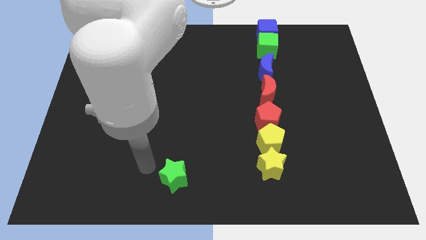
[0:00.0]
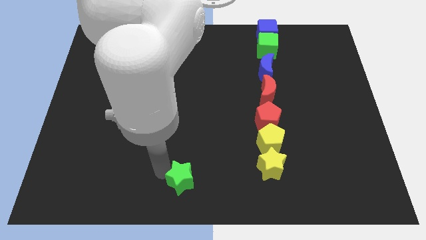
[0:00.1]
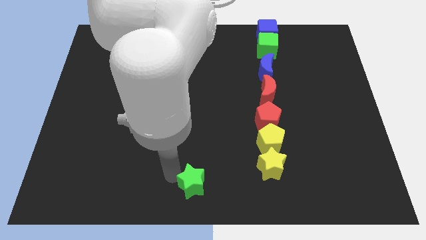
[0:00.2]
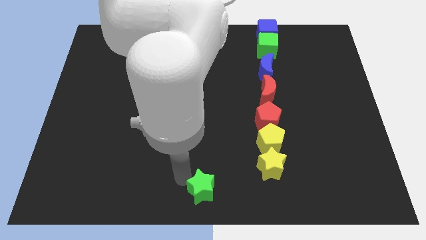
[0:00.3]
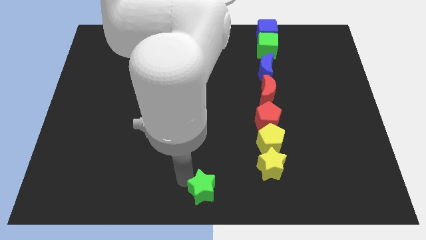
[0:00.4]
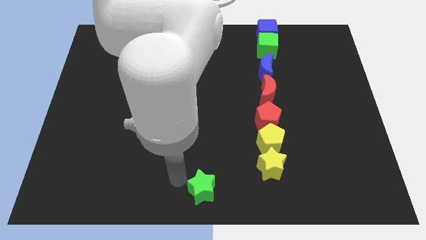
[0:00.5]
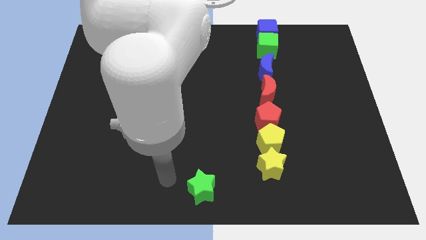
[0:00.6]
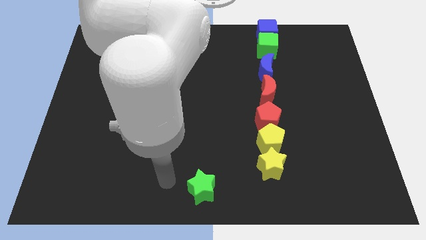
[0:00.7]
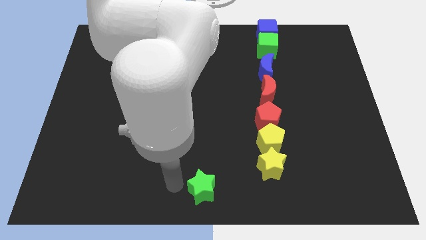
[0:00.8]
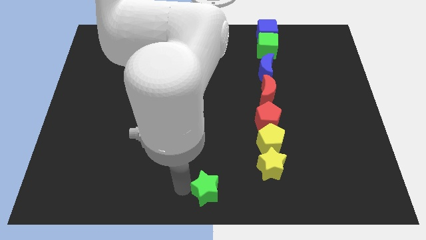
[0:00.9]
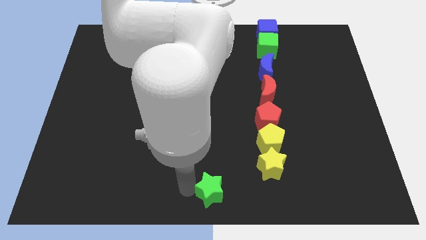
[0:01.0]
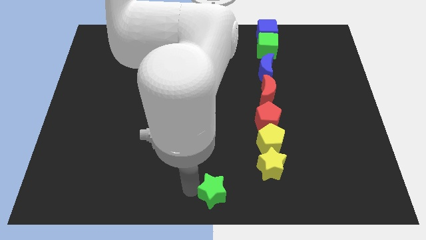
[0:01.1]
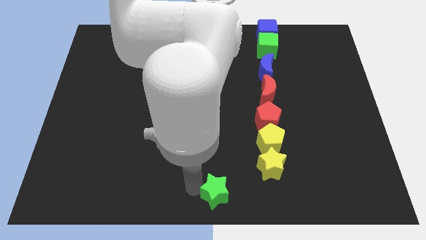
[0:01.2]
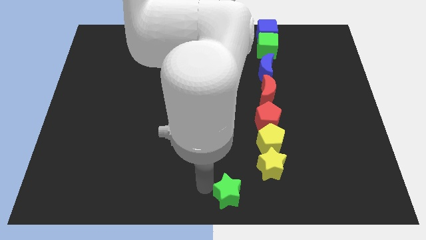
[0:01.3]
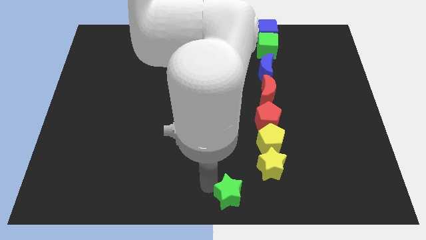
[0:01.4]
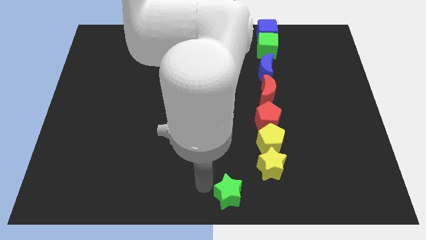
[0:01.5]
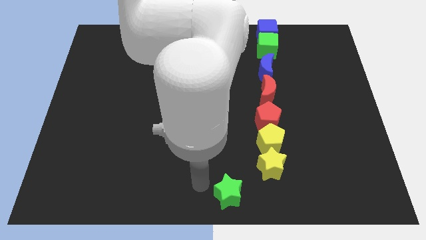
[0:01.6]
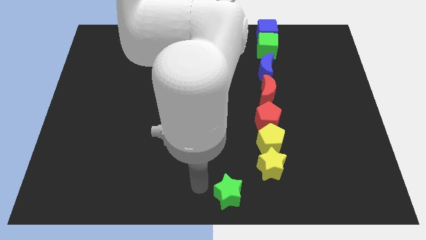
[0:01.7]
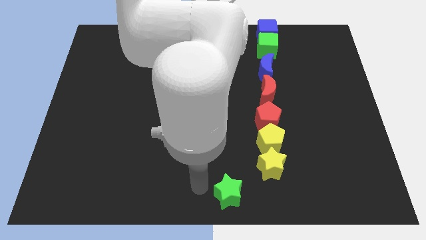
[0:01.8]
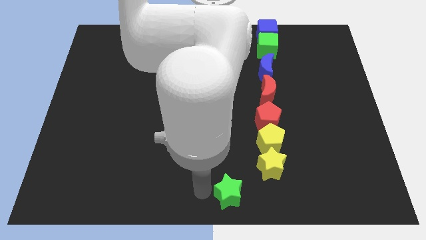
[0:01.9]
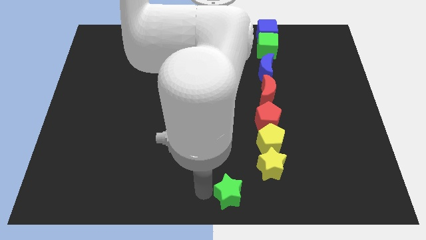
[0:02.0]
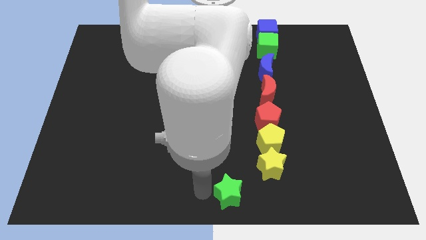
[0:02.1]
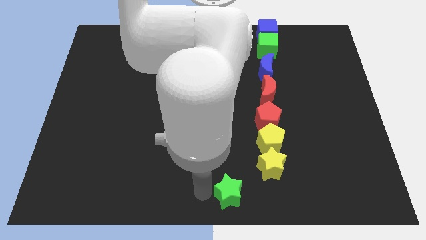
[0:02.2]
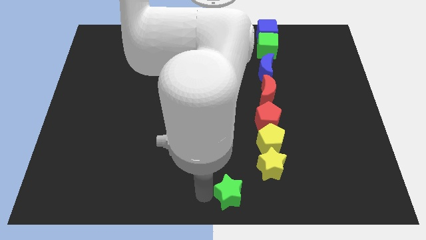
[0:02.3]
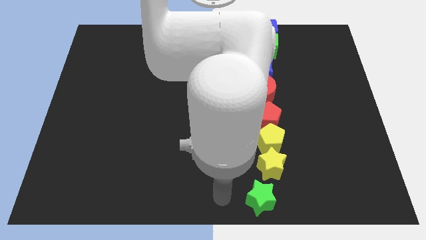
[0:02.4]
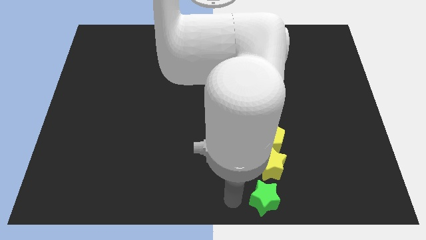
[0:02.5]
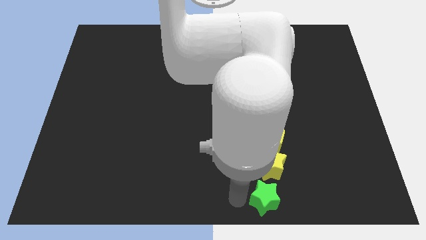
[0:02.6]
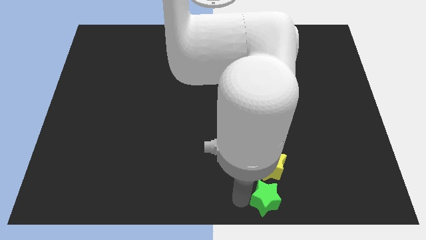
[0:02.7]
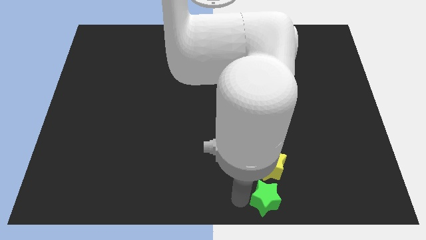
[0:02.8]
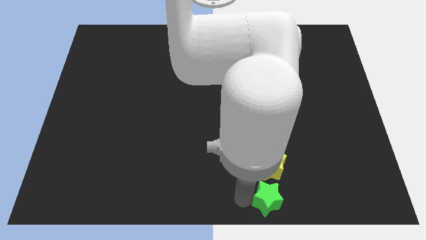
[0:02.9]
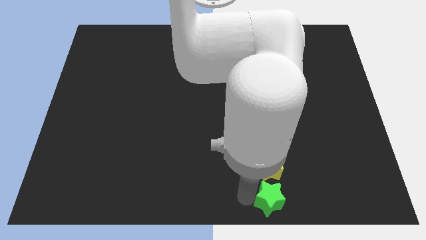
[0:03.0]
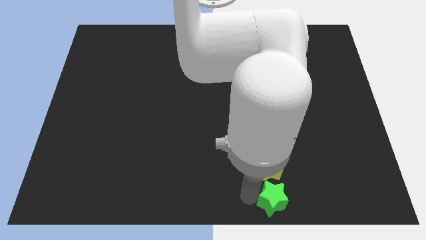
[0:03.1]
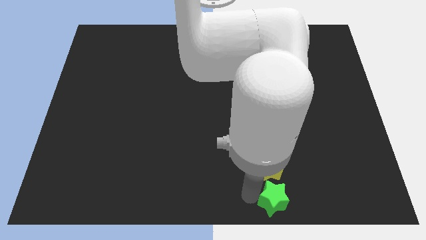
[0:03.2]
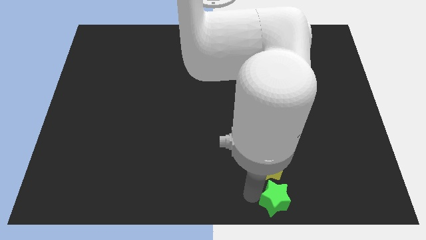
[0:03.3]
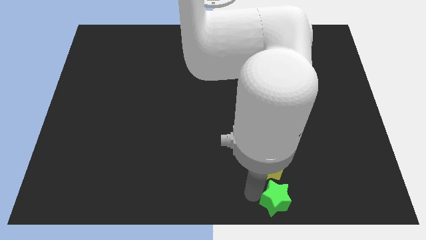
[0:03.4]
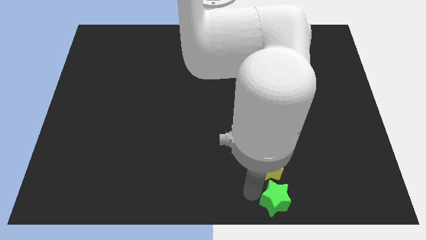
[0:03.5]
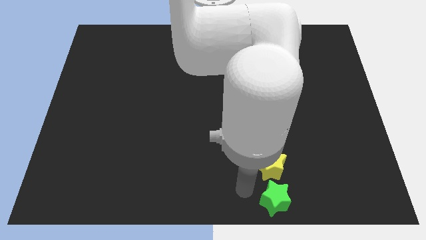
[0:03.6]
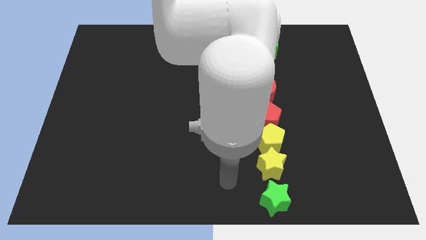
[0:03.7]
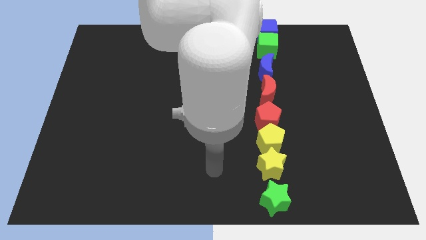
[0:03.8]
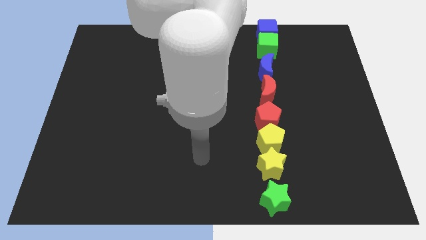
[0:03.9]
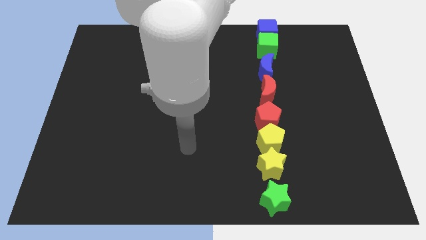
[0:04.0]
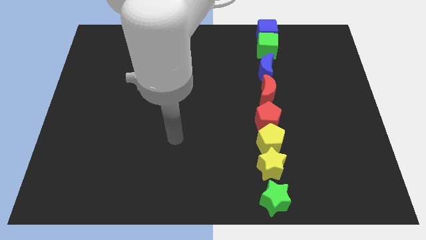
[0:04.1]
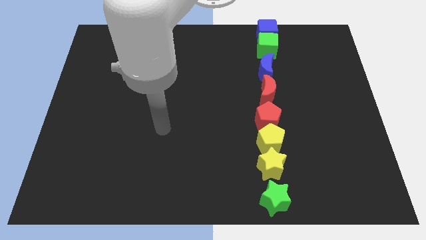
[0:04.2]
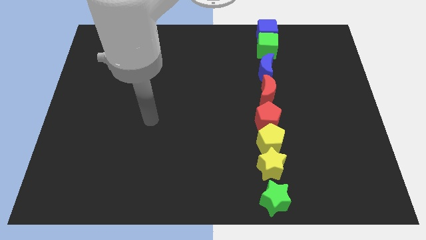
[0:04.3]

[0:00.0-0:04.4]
push the green star to the bottom of the yellow star to form a vertical line

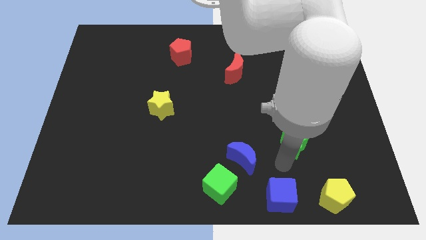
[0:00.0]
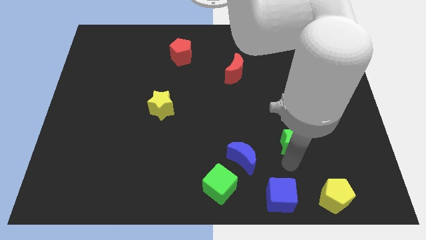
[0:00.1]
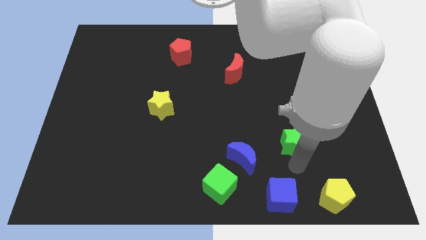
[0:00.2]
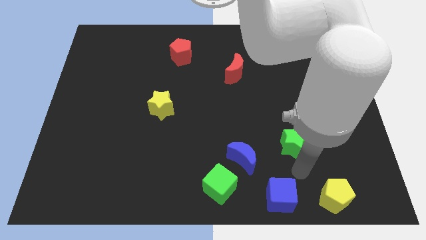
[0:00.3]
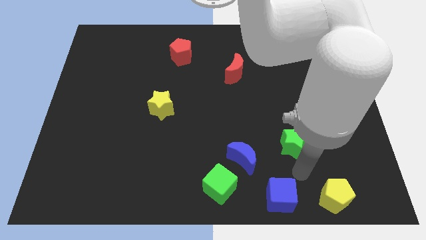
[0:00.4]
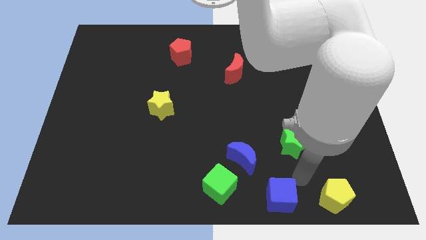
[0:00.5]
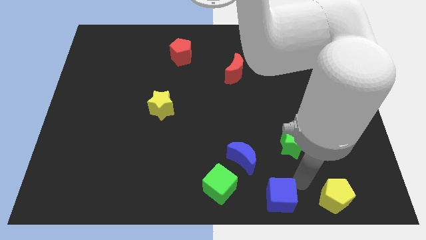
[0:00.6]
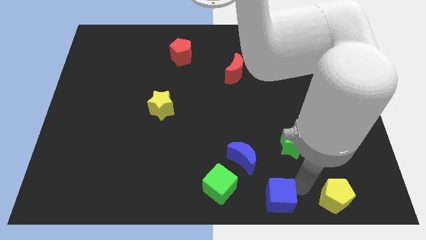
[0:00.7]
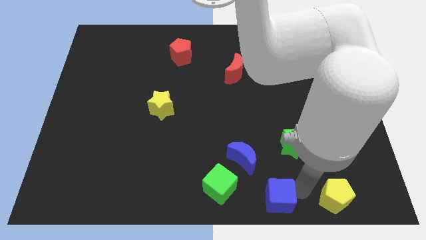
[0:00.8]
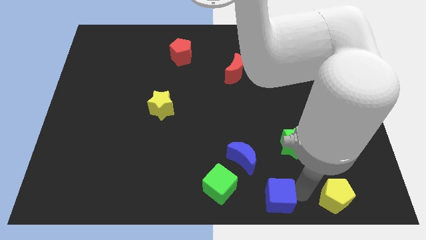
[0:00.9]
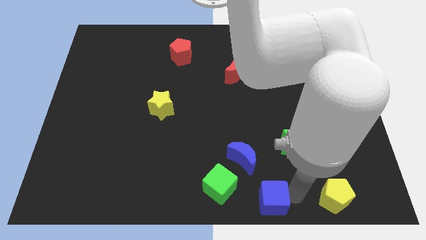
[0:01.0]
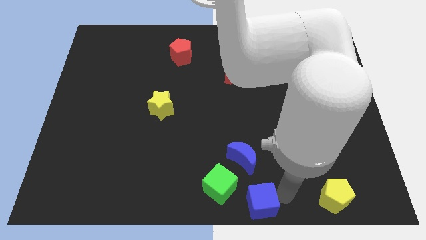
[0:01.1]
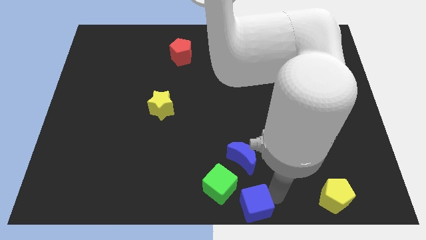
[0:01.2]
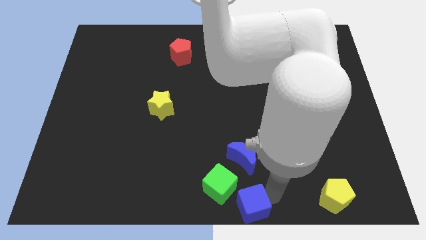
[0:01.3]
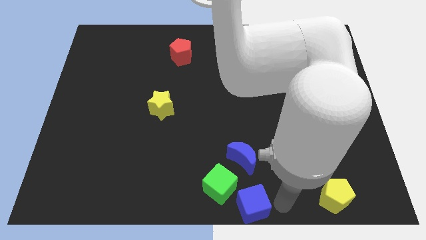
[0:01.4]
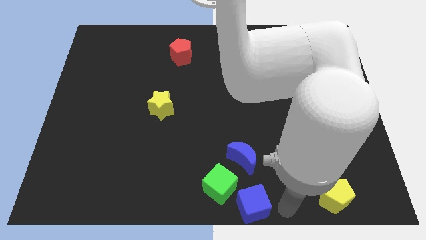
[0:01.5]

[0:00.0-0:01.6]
place the blue cube right to the green cube

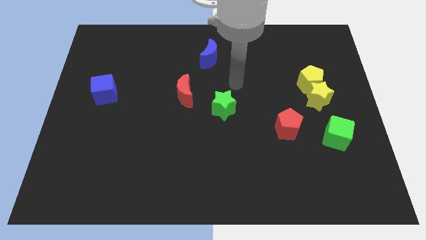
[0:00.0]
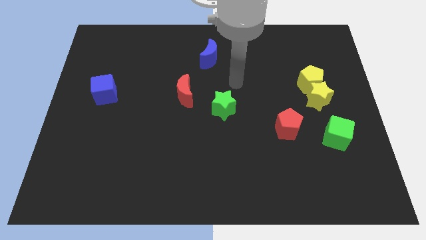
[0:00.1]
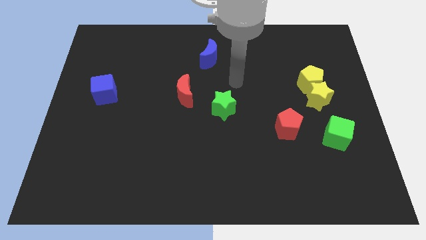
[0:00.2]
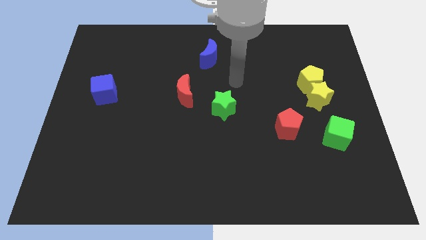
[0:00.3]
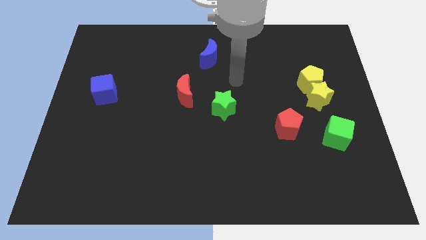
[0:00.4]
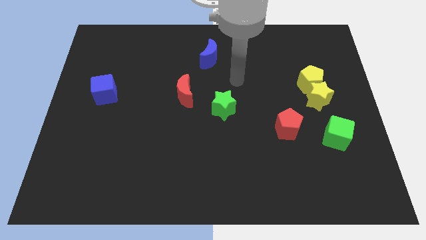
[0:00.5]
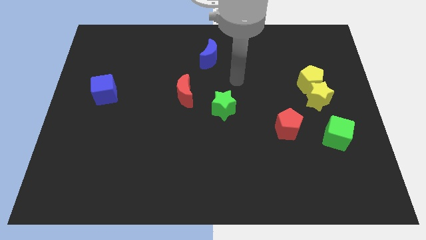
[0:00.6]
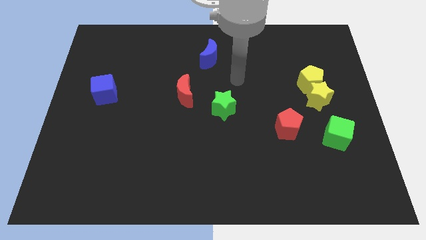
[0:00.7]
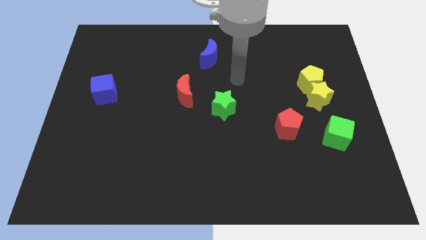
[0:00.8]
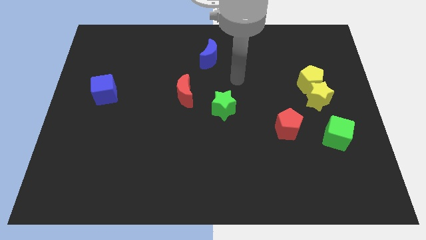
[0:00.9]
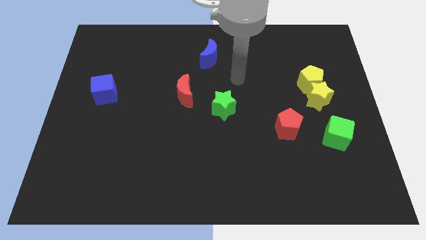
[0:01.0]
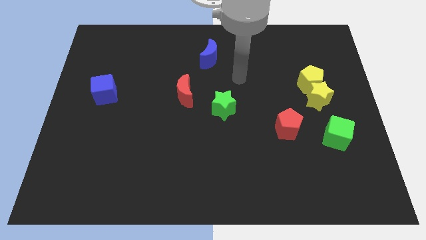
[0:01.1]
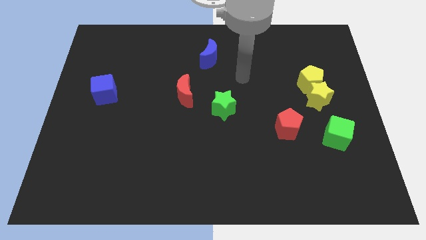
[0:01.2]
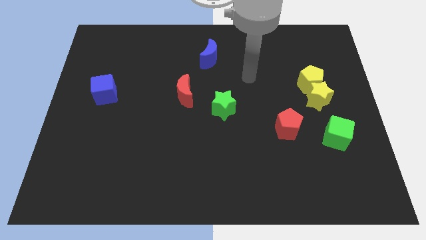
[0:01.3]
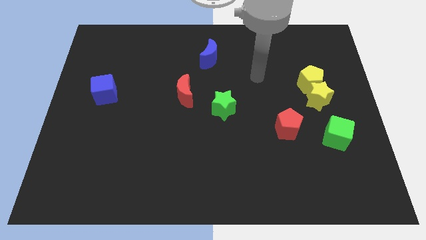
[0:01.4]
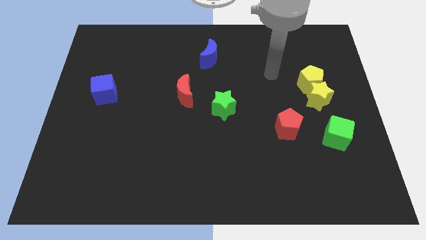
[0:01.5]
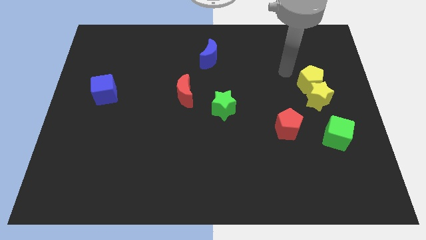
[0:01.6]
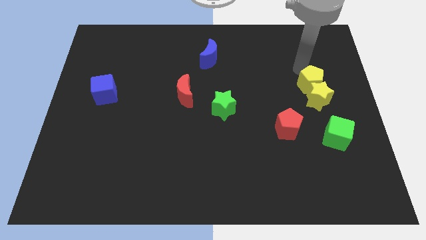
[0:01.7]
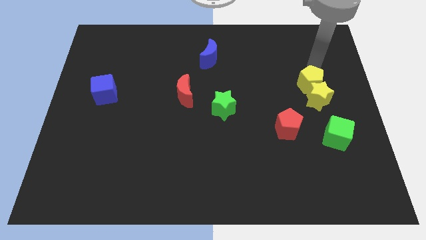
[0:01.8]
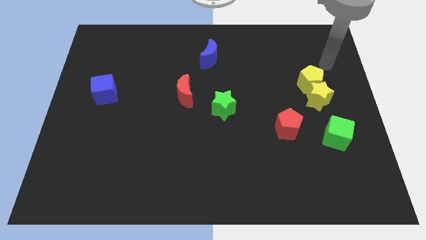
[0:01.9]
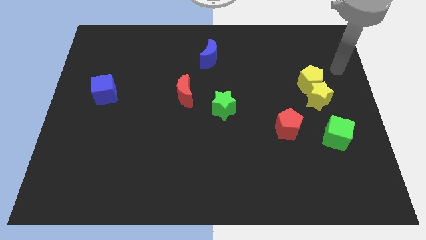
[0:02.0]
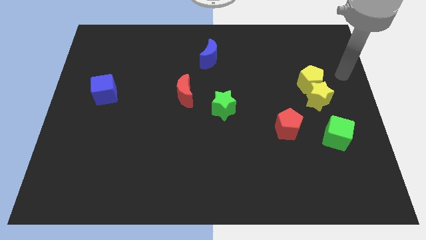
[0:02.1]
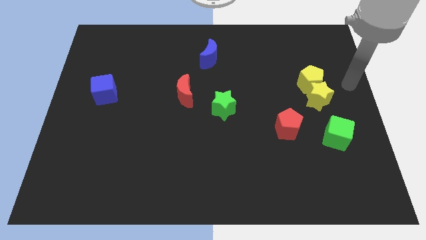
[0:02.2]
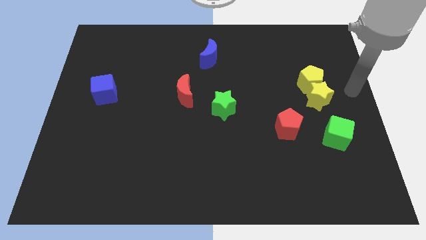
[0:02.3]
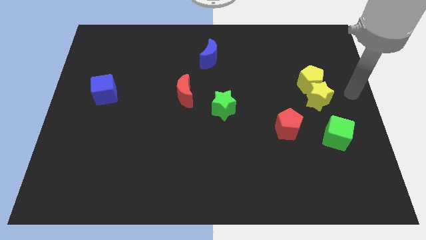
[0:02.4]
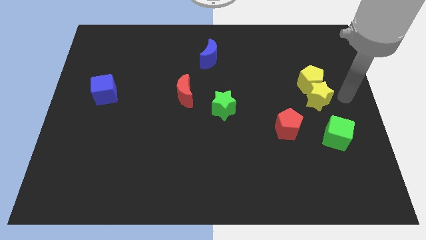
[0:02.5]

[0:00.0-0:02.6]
move your arm to the right of the yellow star

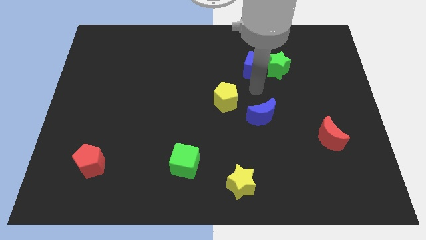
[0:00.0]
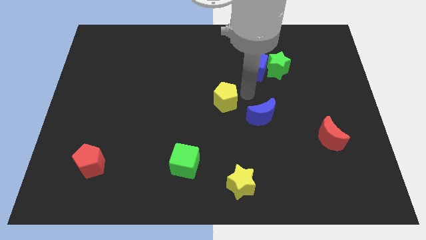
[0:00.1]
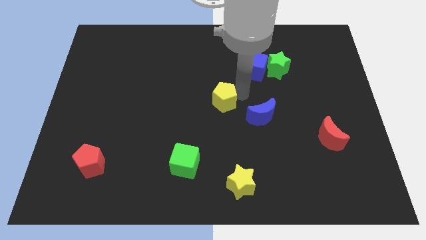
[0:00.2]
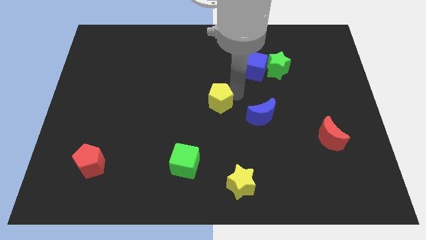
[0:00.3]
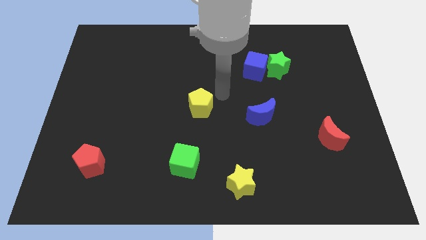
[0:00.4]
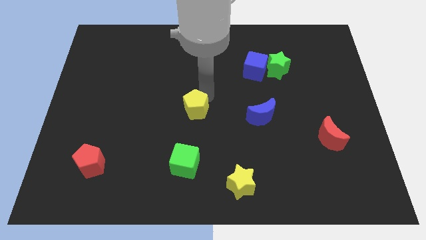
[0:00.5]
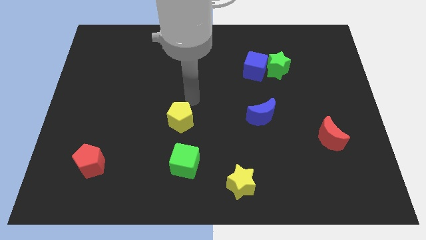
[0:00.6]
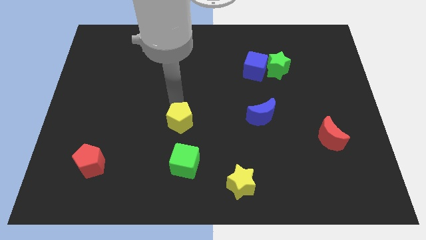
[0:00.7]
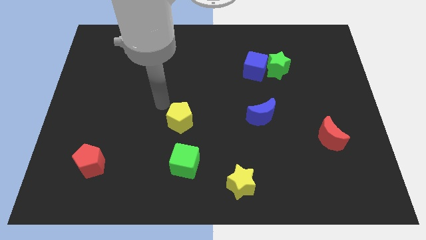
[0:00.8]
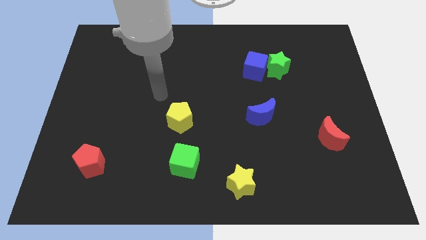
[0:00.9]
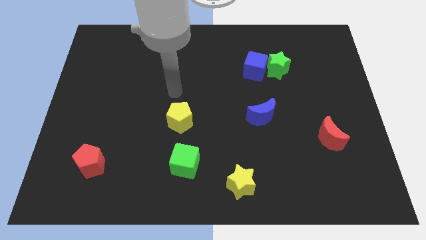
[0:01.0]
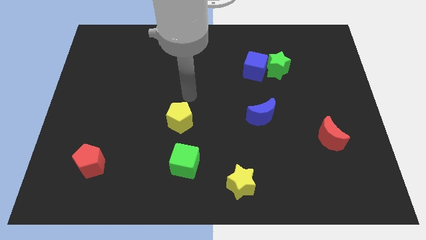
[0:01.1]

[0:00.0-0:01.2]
put the yellow pentagon at the top of green cube
